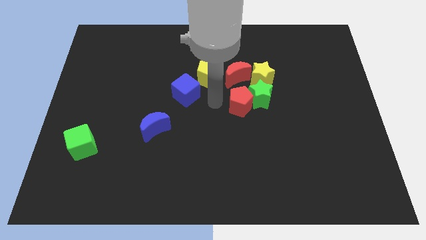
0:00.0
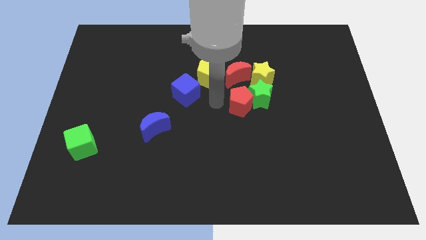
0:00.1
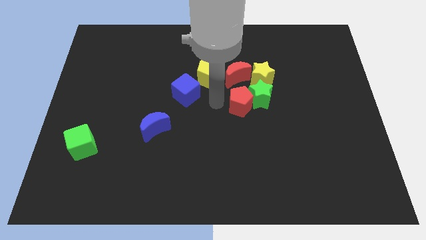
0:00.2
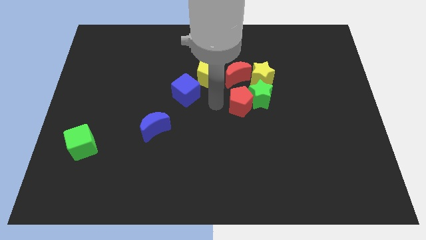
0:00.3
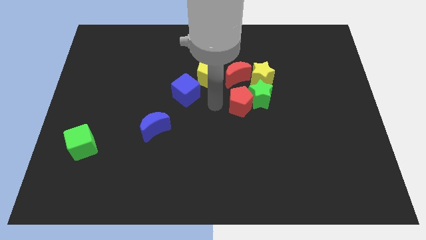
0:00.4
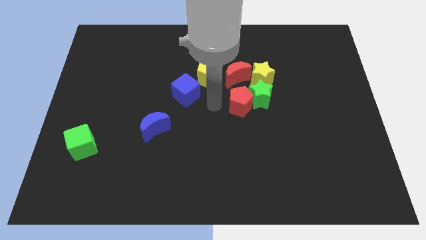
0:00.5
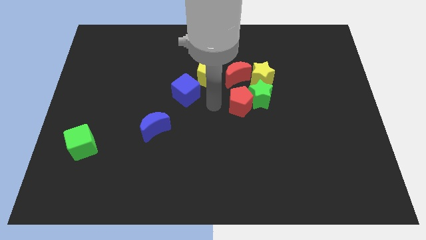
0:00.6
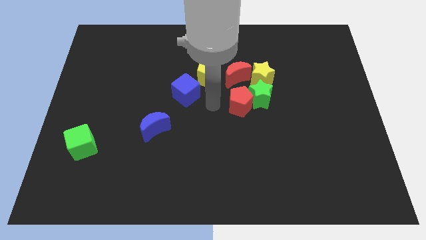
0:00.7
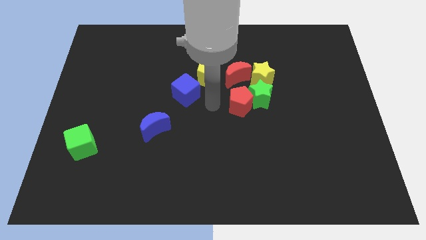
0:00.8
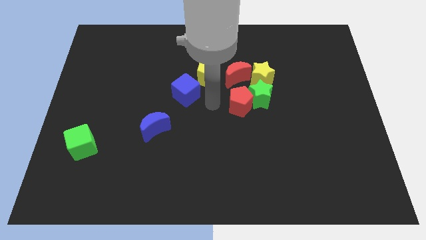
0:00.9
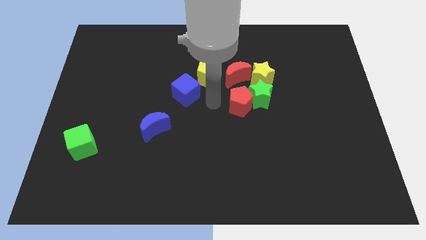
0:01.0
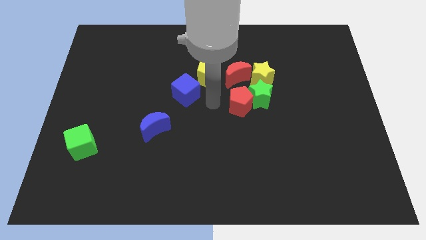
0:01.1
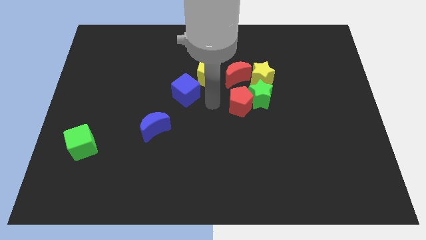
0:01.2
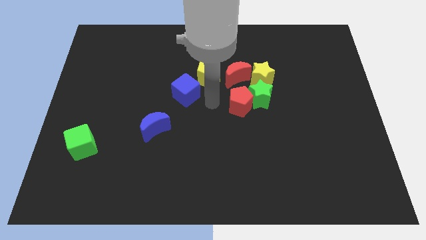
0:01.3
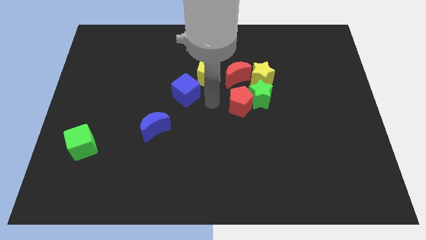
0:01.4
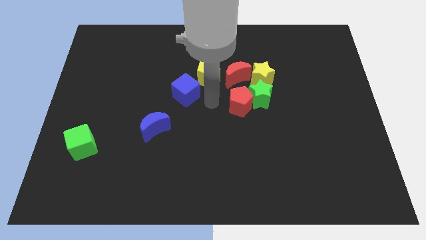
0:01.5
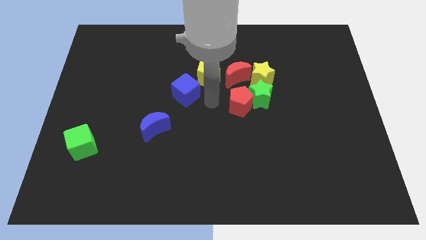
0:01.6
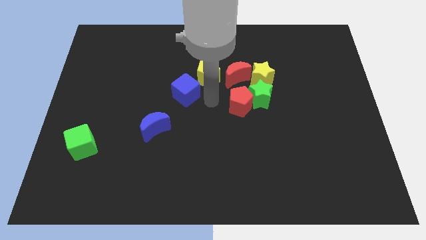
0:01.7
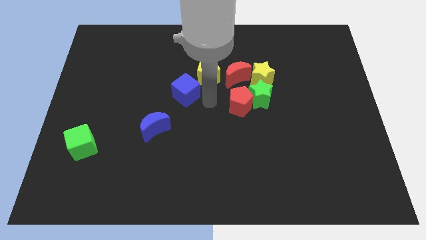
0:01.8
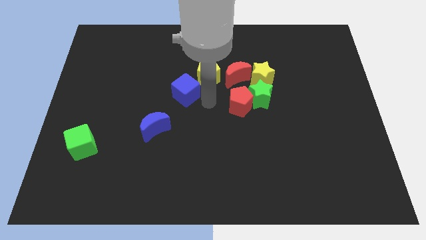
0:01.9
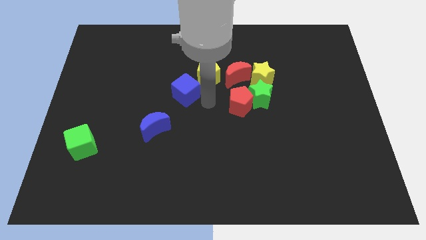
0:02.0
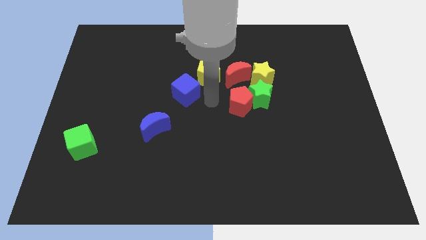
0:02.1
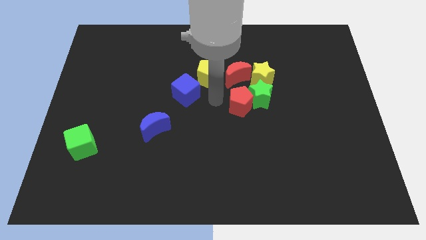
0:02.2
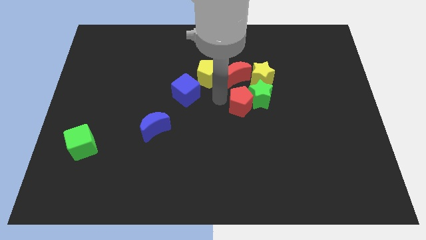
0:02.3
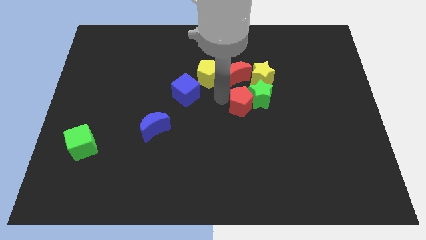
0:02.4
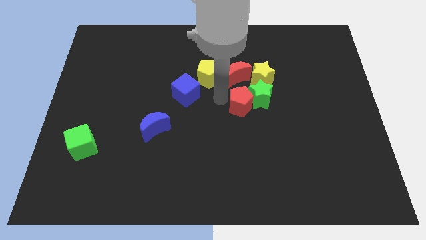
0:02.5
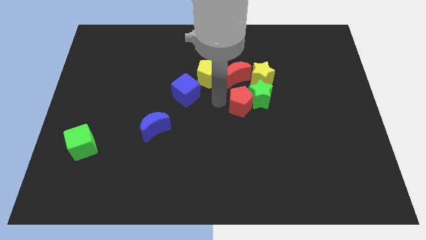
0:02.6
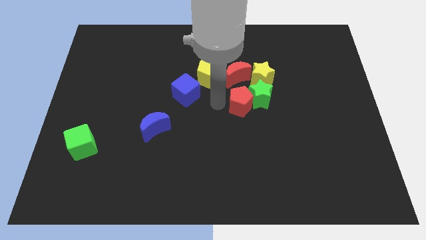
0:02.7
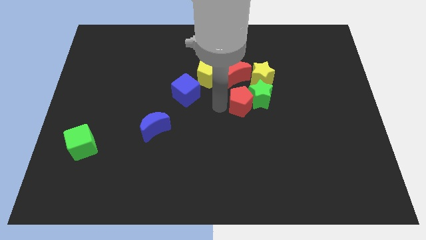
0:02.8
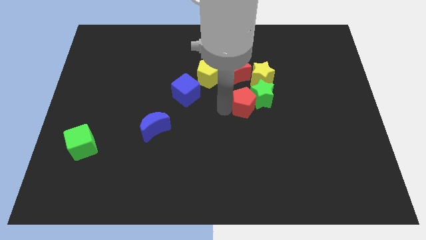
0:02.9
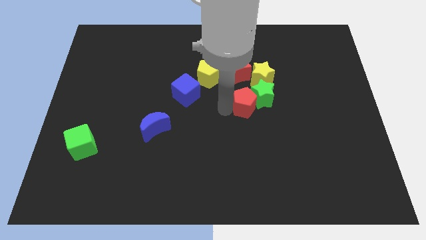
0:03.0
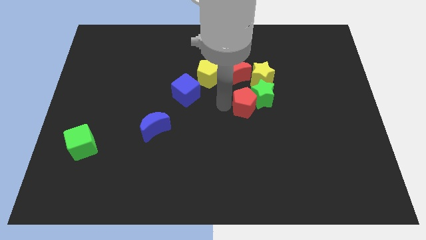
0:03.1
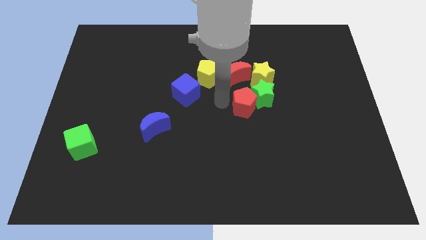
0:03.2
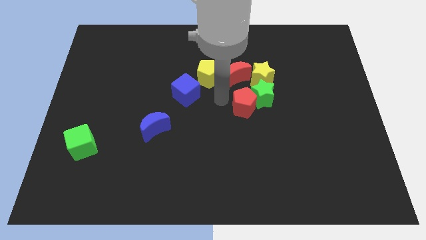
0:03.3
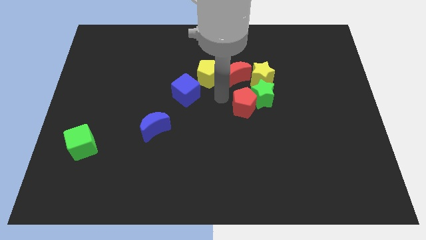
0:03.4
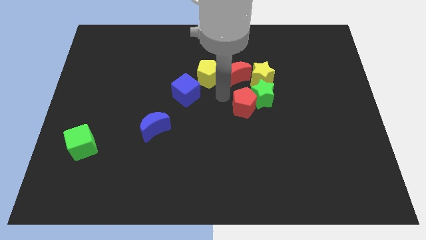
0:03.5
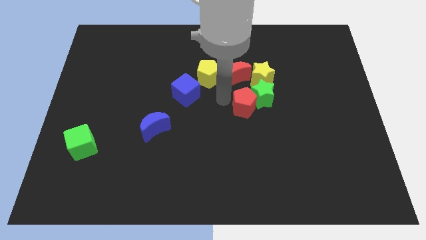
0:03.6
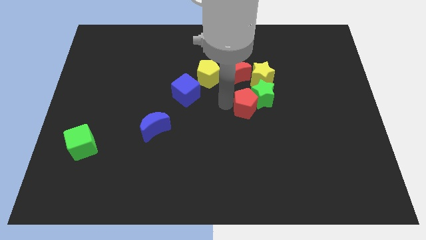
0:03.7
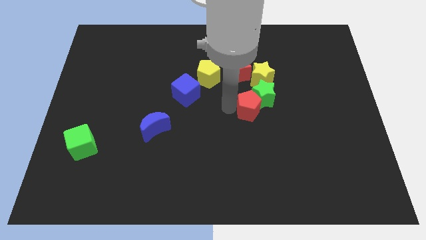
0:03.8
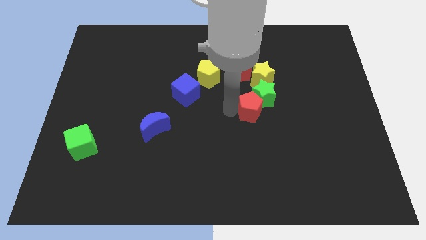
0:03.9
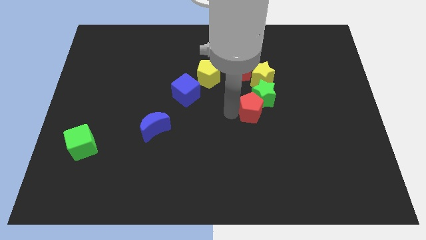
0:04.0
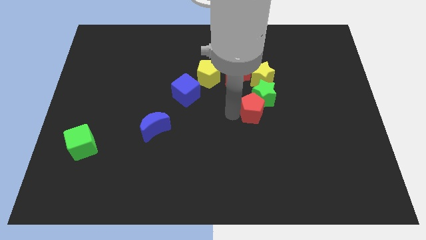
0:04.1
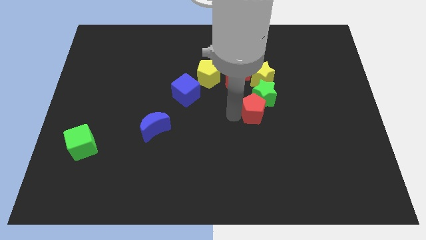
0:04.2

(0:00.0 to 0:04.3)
place the red pentagon to the bottom left of green star

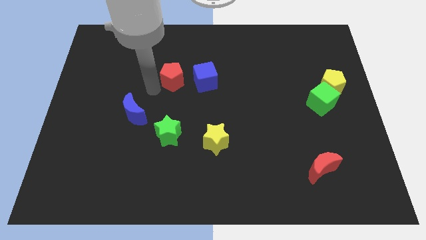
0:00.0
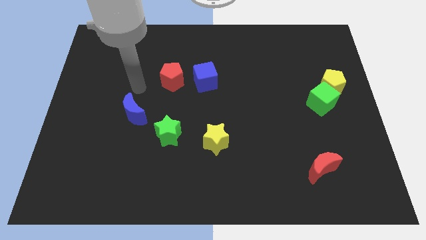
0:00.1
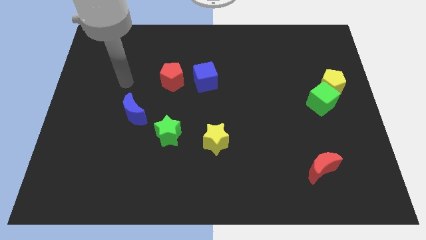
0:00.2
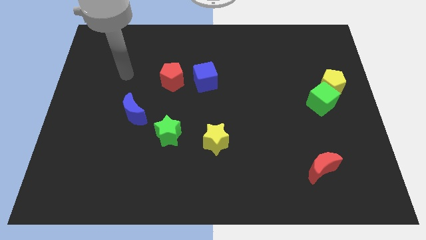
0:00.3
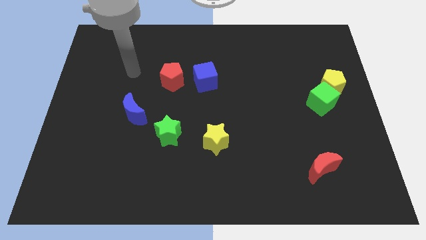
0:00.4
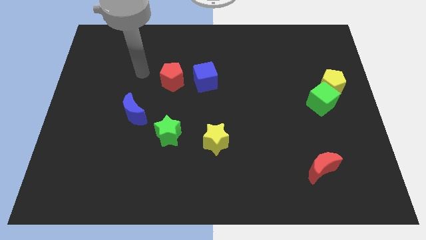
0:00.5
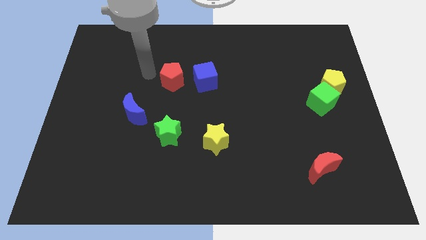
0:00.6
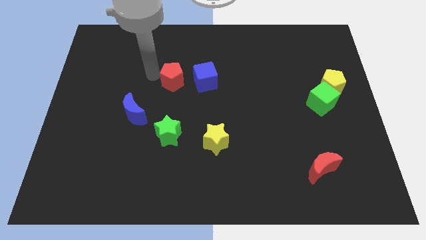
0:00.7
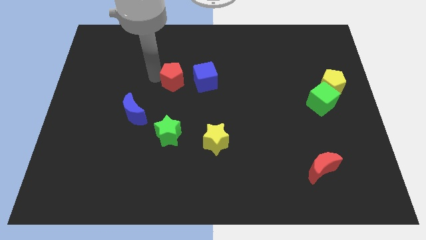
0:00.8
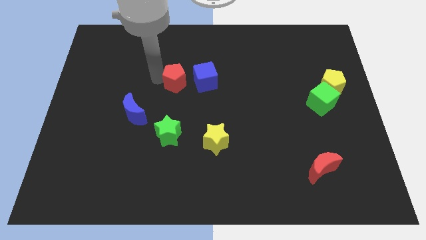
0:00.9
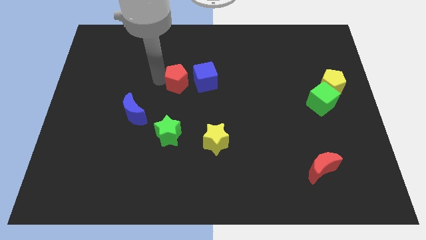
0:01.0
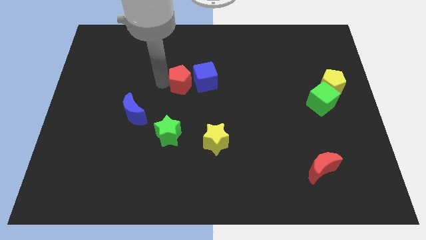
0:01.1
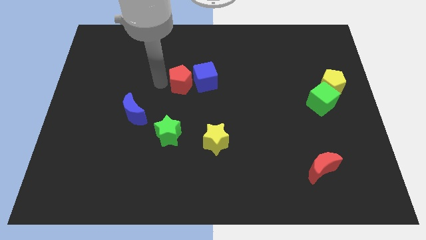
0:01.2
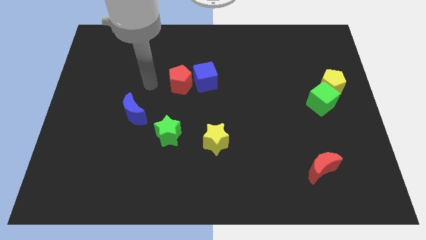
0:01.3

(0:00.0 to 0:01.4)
move the red pentagon close to the blue cube

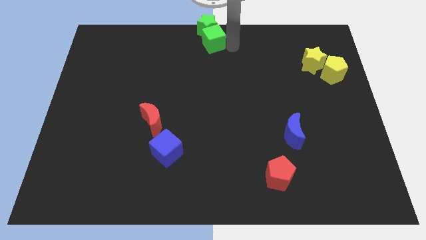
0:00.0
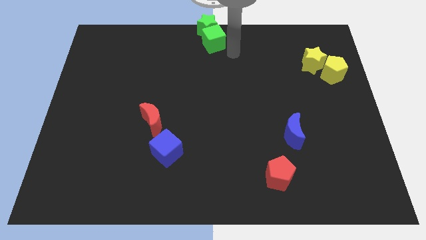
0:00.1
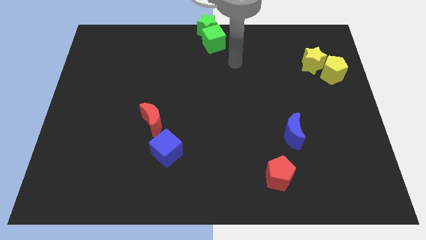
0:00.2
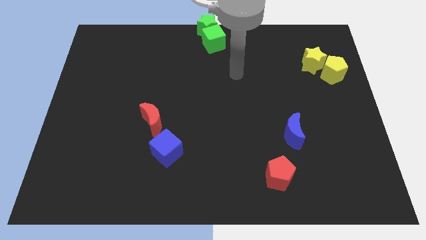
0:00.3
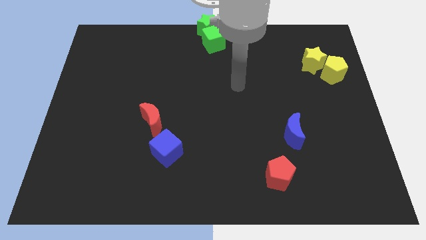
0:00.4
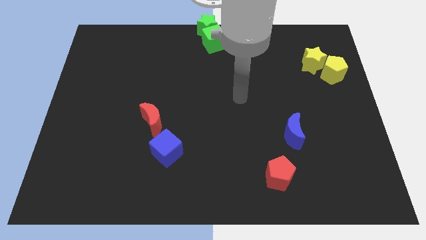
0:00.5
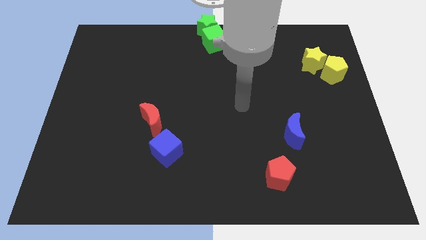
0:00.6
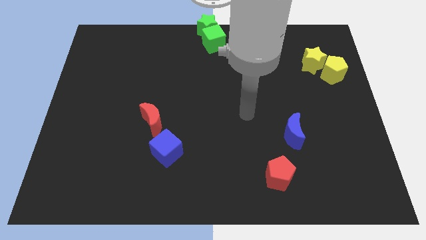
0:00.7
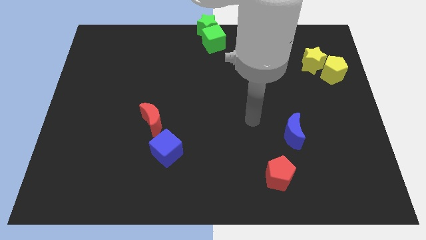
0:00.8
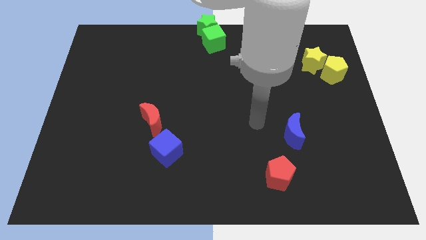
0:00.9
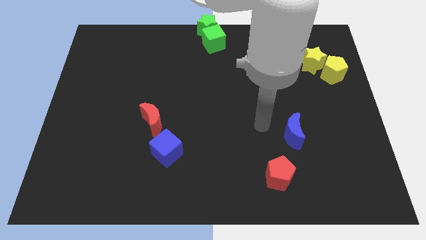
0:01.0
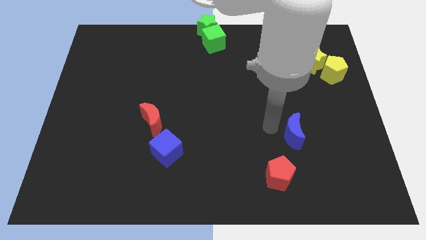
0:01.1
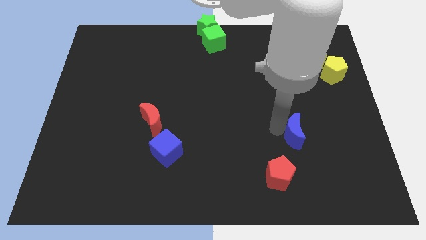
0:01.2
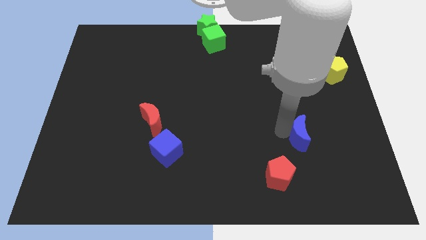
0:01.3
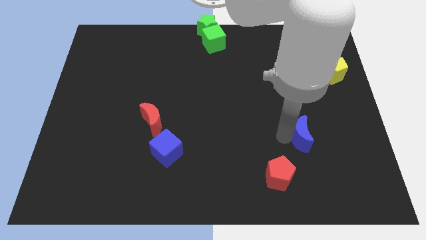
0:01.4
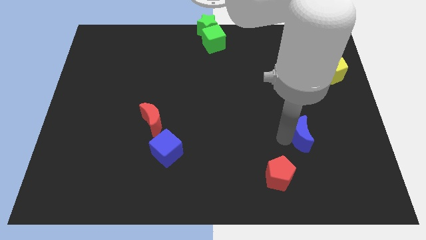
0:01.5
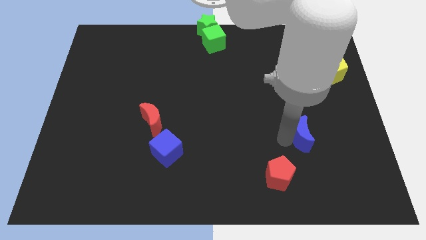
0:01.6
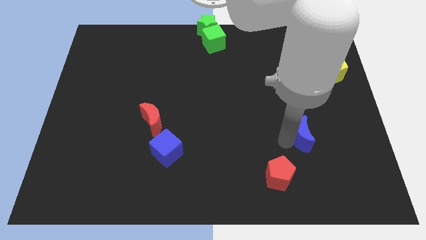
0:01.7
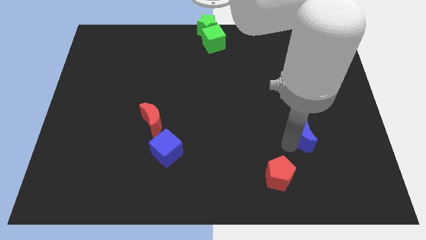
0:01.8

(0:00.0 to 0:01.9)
slide the blue moon slightly towards the right

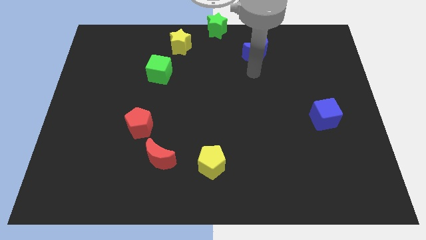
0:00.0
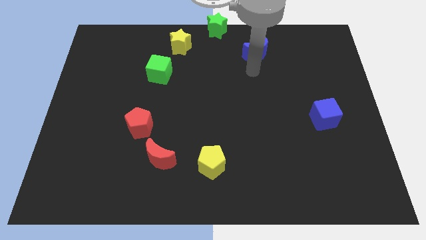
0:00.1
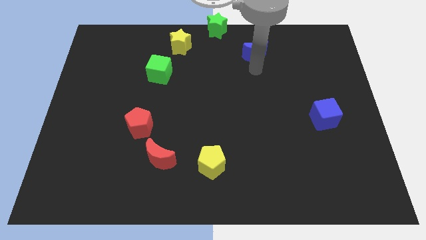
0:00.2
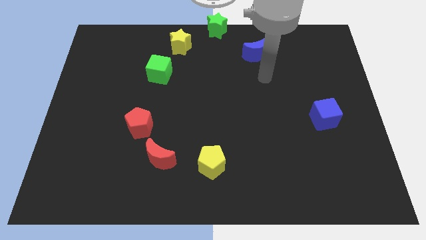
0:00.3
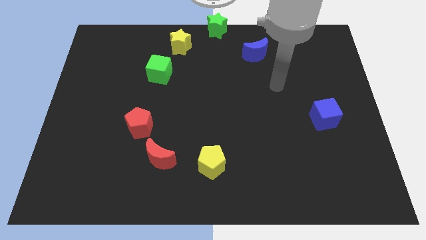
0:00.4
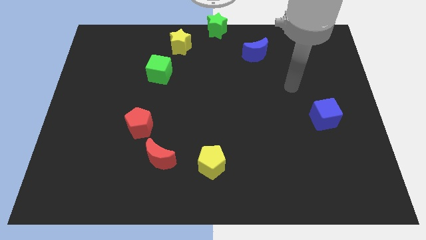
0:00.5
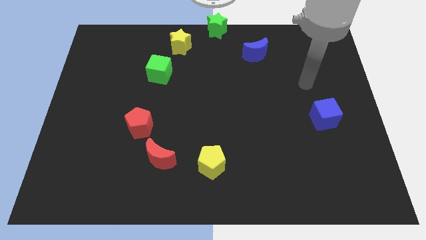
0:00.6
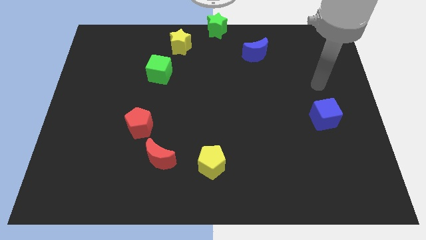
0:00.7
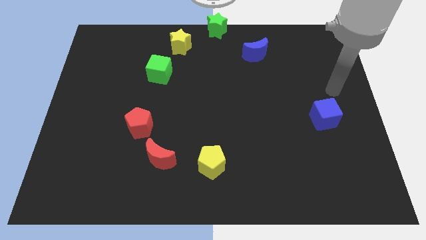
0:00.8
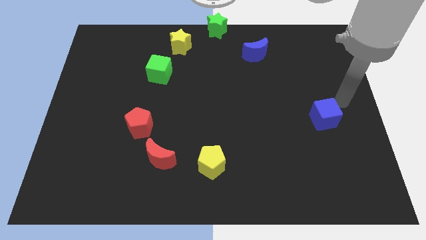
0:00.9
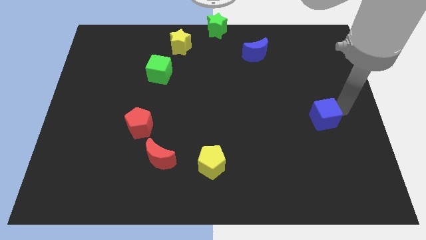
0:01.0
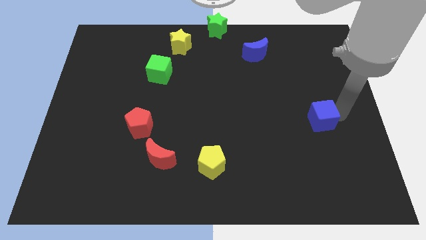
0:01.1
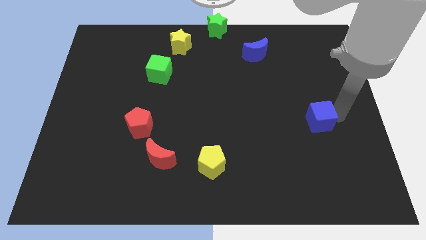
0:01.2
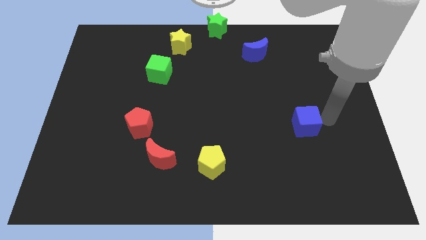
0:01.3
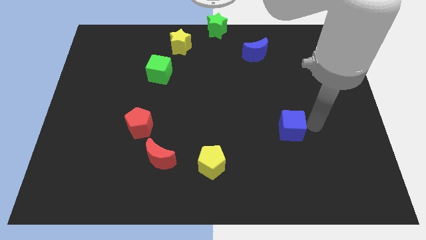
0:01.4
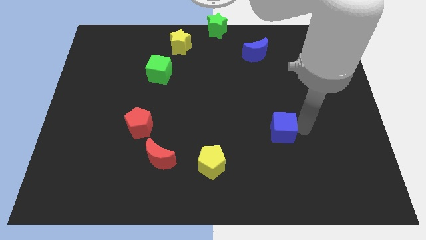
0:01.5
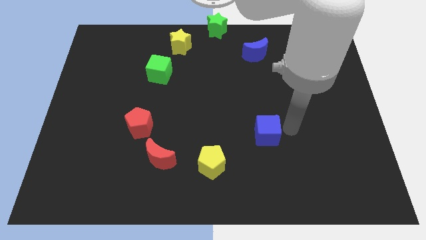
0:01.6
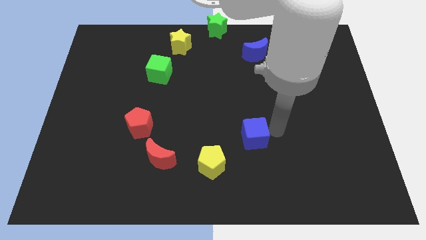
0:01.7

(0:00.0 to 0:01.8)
move blue cube slightly towards the center
